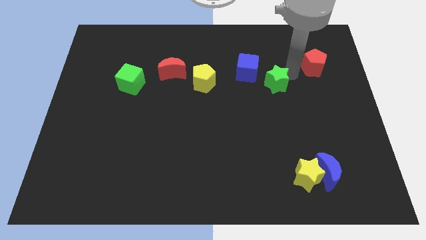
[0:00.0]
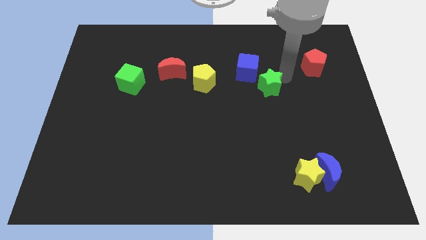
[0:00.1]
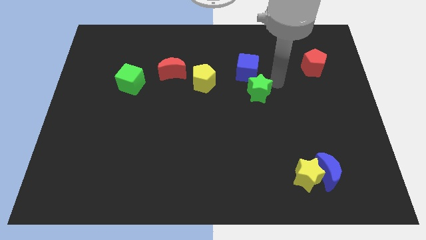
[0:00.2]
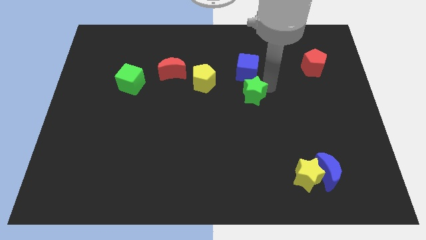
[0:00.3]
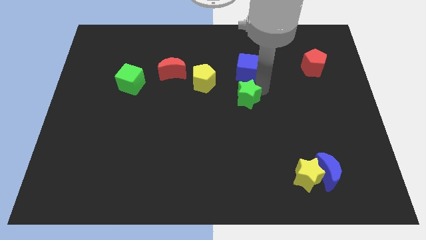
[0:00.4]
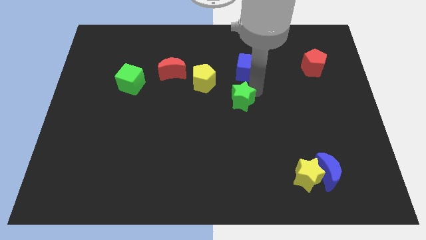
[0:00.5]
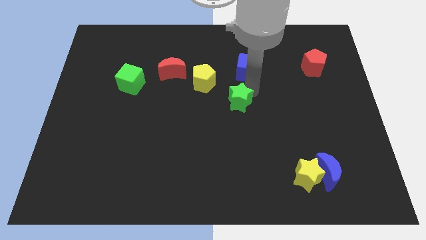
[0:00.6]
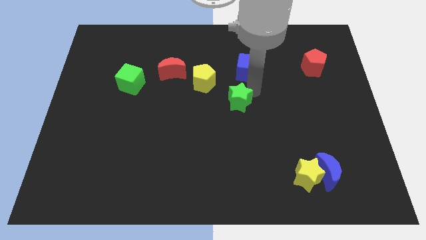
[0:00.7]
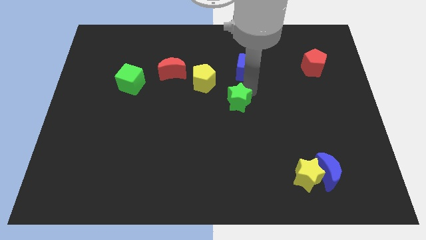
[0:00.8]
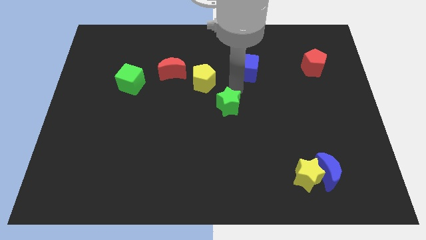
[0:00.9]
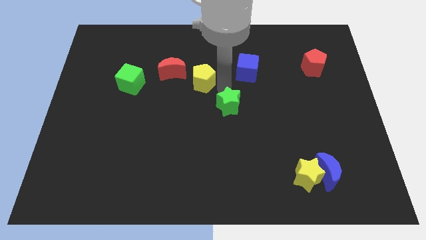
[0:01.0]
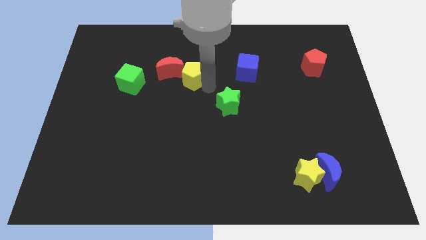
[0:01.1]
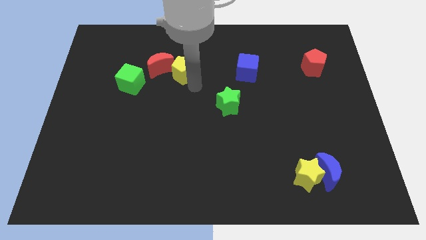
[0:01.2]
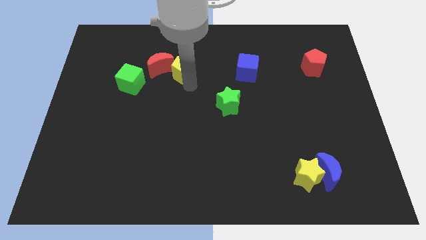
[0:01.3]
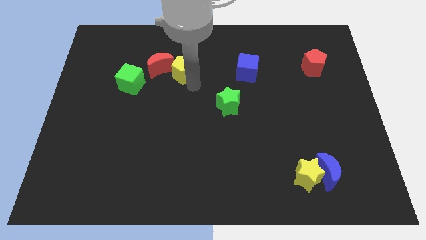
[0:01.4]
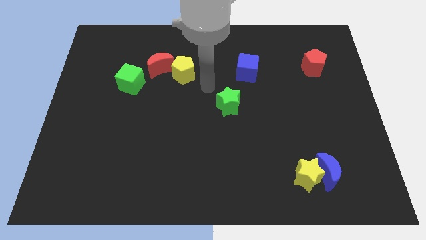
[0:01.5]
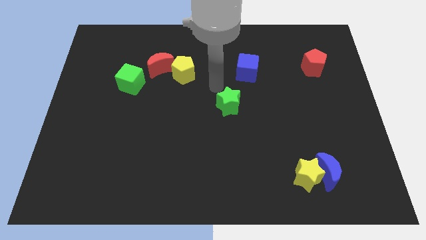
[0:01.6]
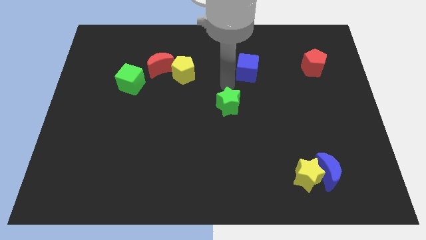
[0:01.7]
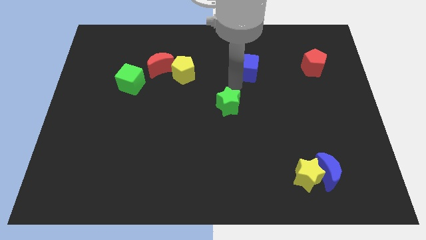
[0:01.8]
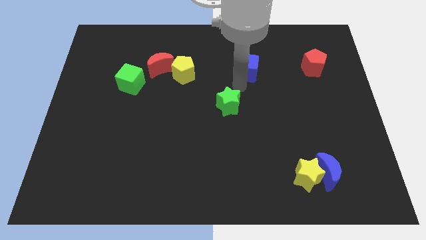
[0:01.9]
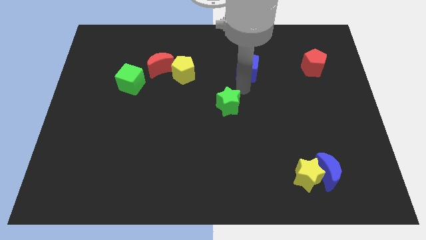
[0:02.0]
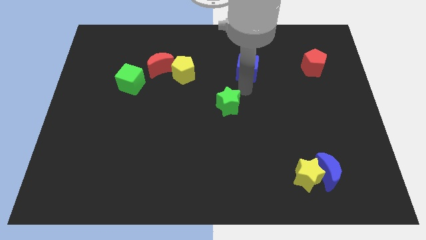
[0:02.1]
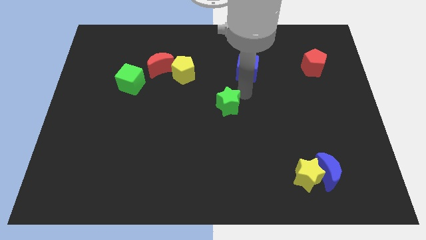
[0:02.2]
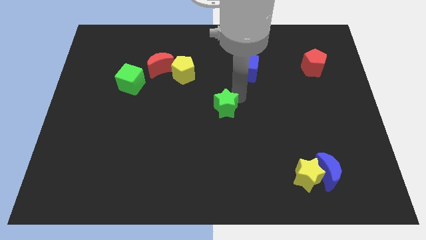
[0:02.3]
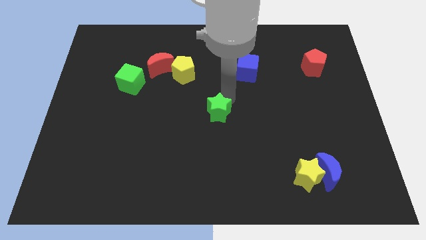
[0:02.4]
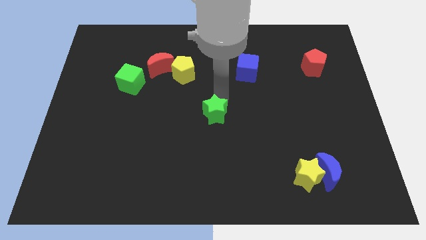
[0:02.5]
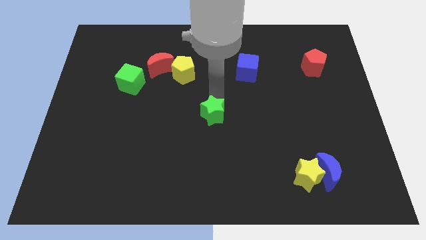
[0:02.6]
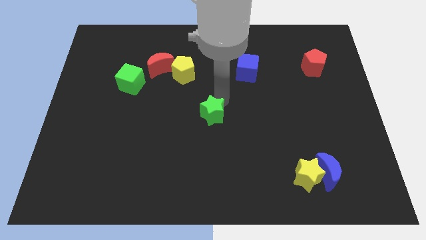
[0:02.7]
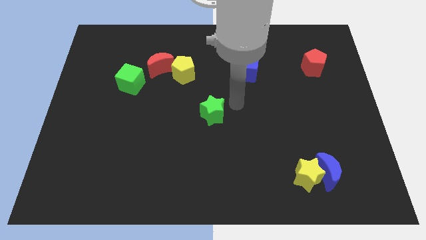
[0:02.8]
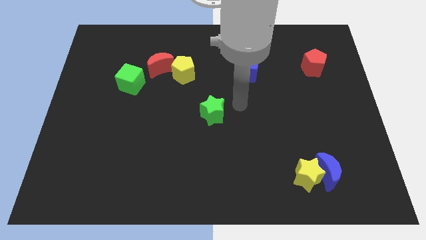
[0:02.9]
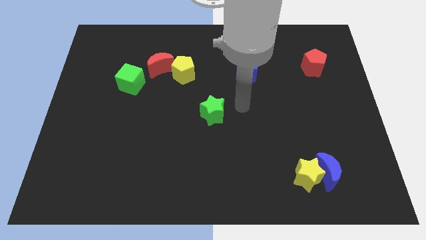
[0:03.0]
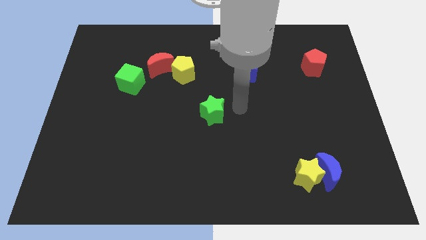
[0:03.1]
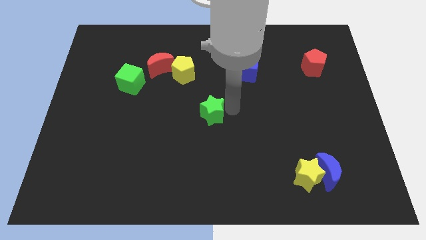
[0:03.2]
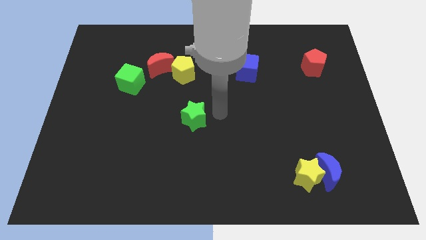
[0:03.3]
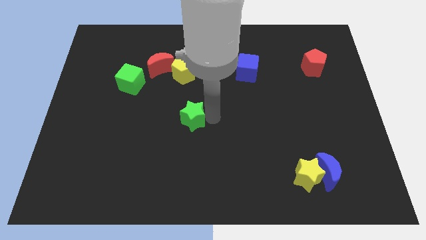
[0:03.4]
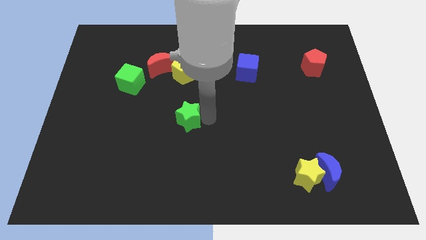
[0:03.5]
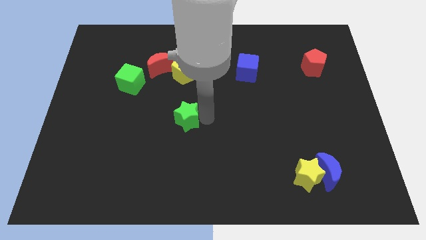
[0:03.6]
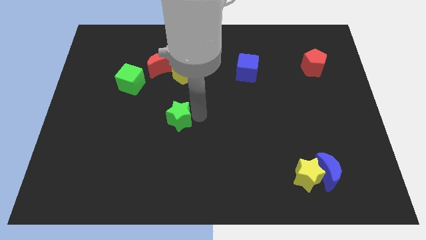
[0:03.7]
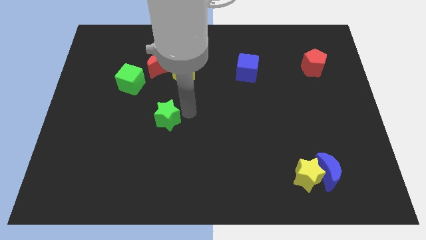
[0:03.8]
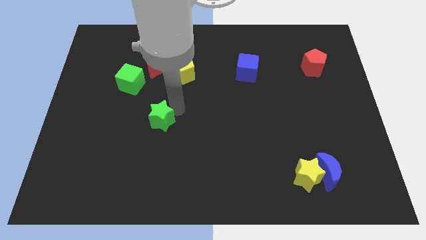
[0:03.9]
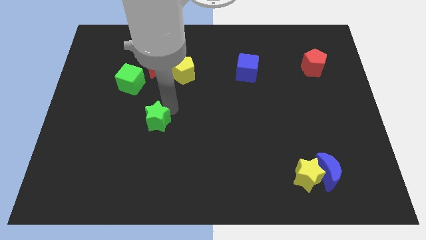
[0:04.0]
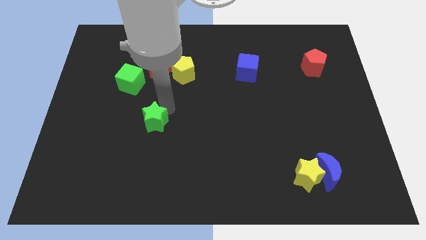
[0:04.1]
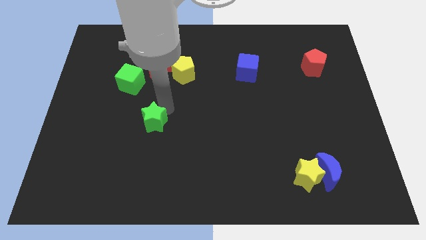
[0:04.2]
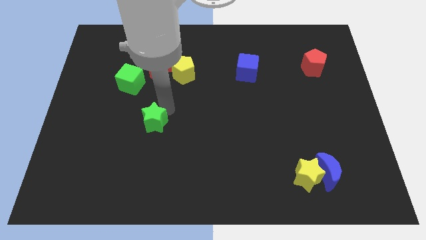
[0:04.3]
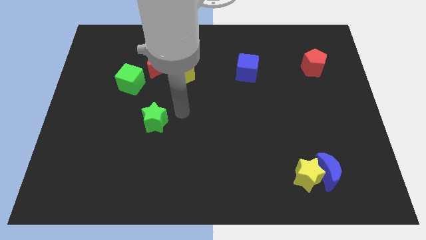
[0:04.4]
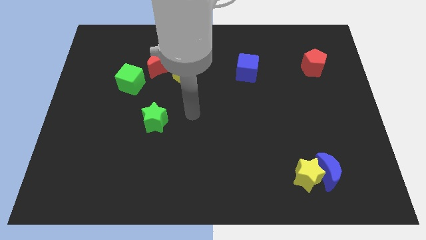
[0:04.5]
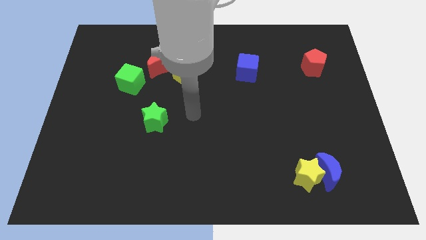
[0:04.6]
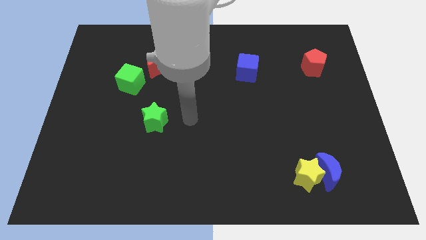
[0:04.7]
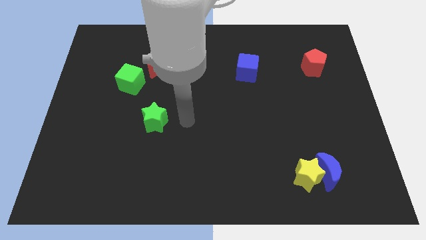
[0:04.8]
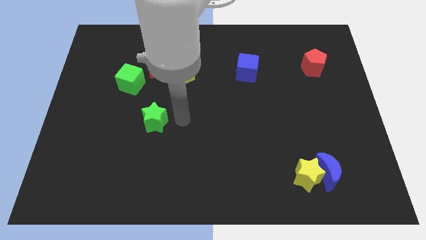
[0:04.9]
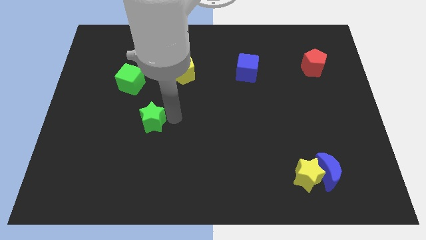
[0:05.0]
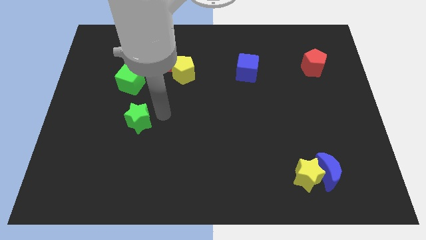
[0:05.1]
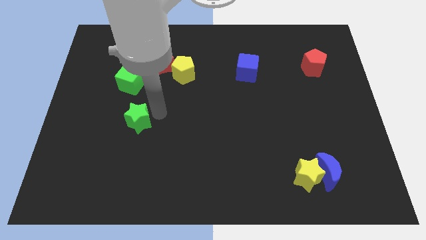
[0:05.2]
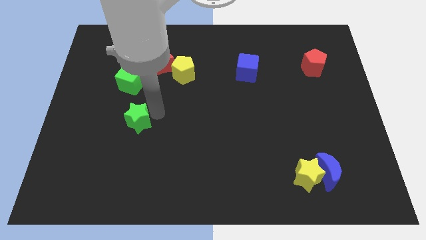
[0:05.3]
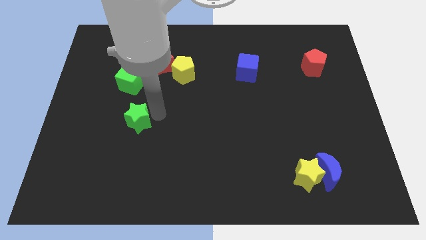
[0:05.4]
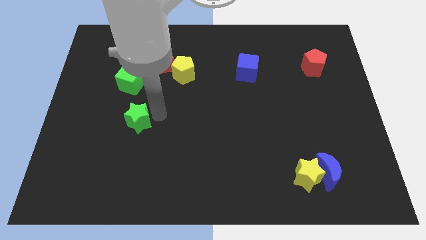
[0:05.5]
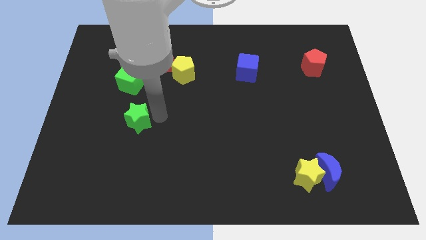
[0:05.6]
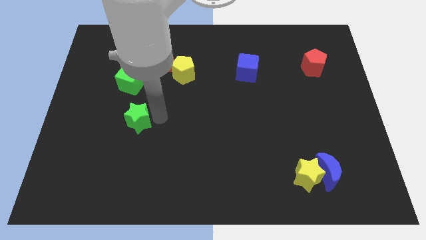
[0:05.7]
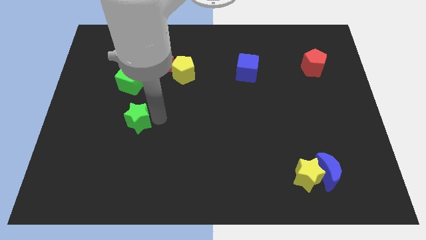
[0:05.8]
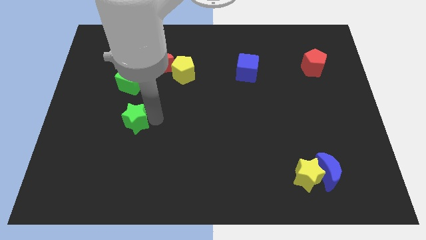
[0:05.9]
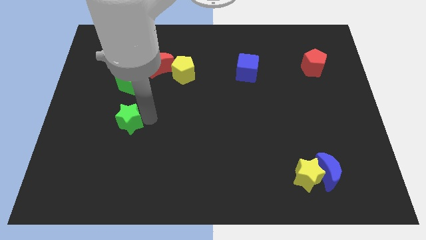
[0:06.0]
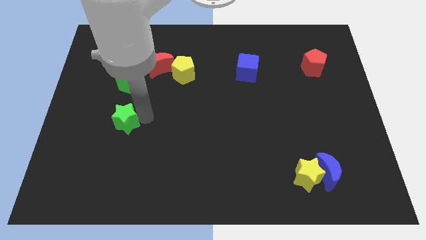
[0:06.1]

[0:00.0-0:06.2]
place the green star below the green cube

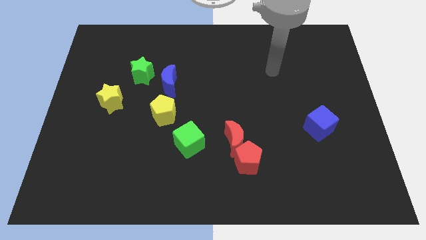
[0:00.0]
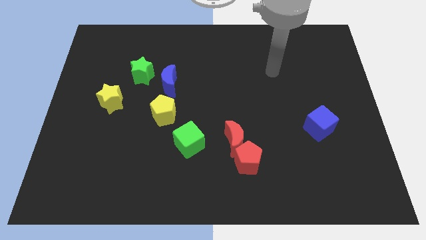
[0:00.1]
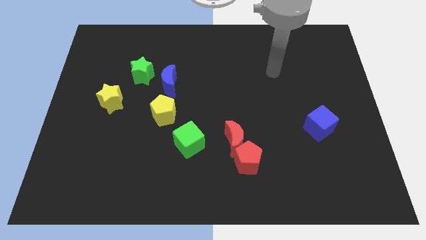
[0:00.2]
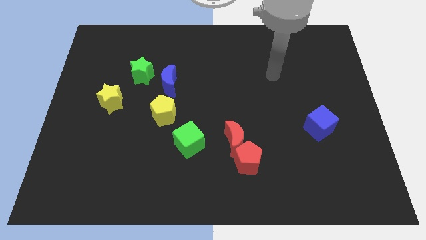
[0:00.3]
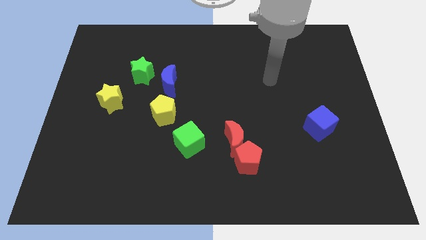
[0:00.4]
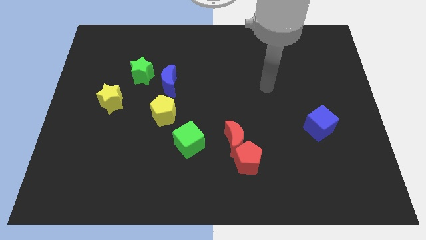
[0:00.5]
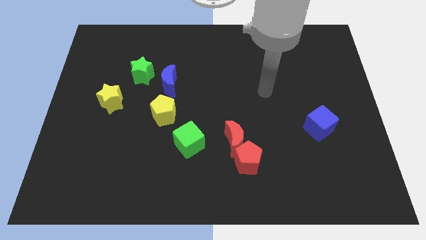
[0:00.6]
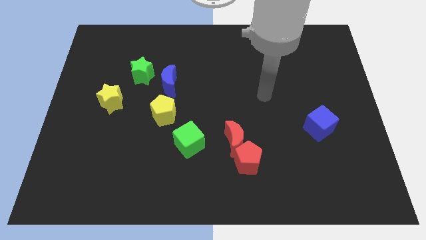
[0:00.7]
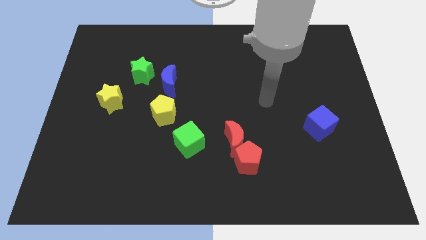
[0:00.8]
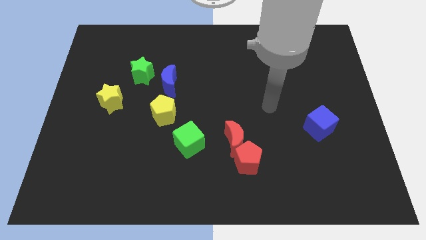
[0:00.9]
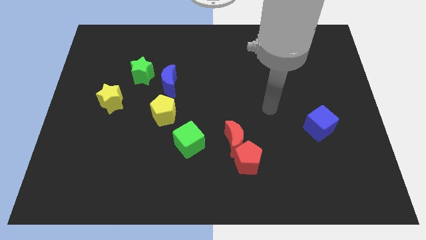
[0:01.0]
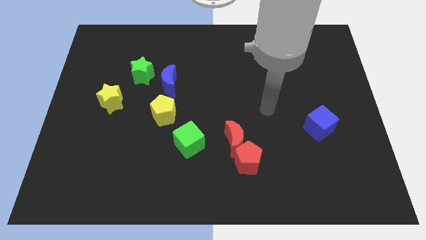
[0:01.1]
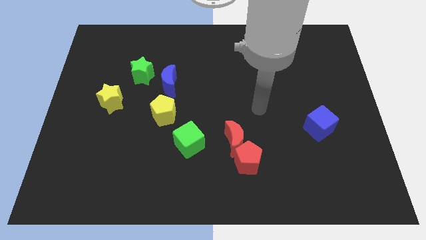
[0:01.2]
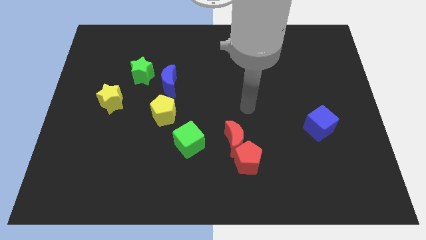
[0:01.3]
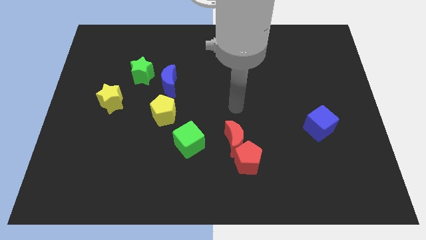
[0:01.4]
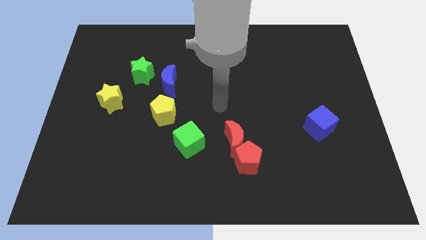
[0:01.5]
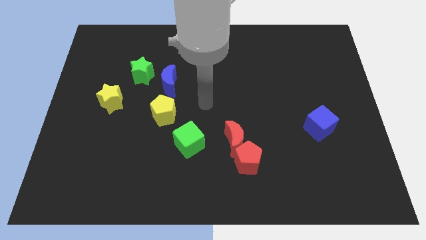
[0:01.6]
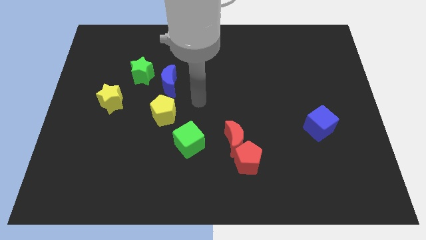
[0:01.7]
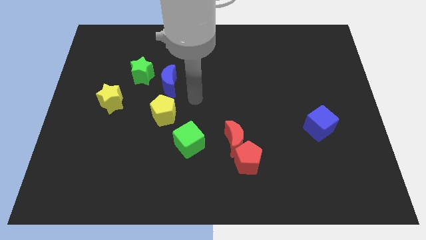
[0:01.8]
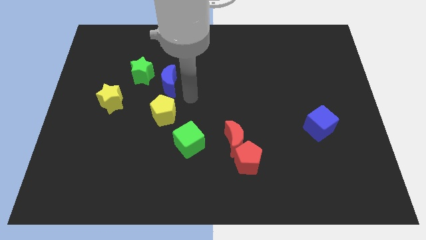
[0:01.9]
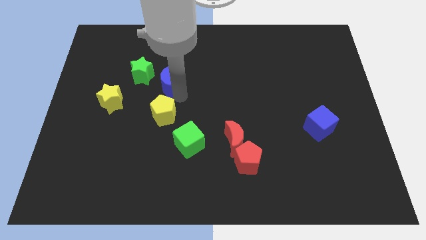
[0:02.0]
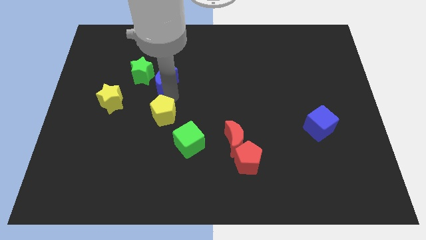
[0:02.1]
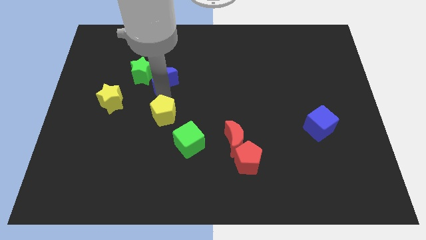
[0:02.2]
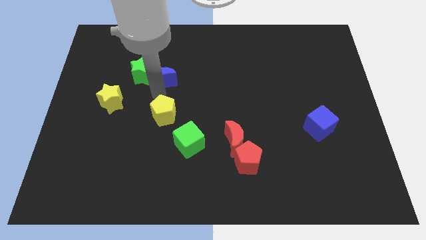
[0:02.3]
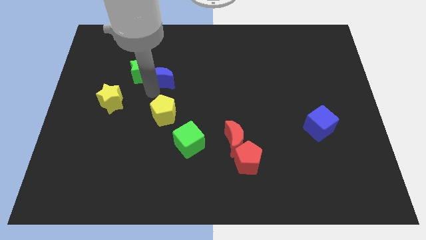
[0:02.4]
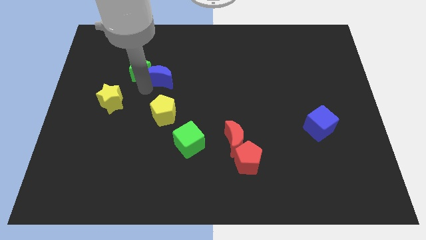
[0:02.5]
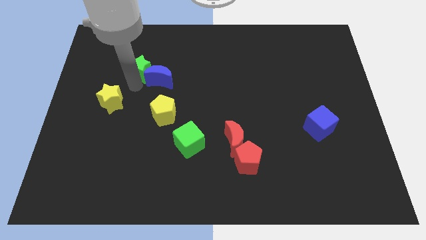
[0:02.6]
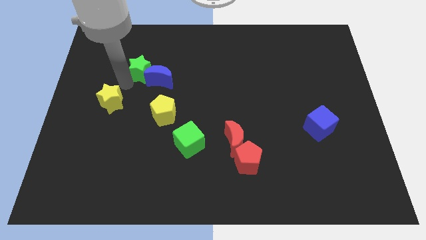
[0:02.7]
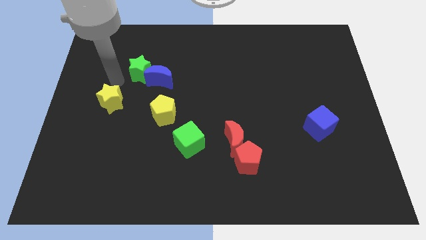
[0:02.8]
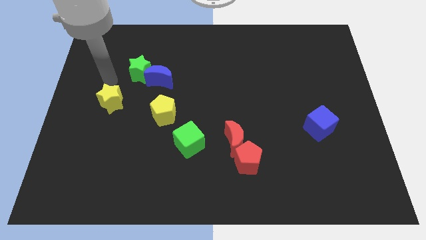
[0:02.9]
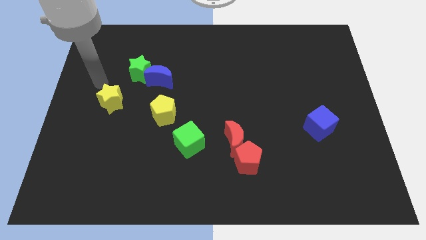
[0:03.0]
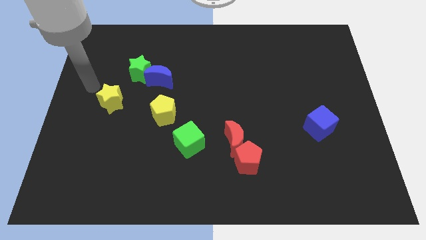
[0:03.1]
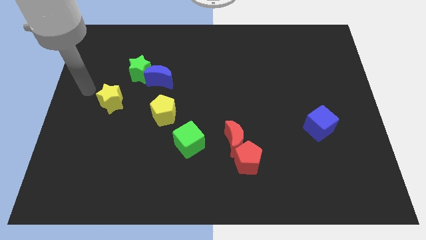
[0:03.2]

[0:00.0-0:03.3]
separate the blue moon with yellow pentagon
